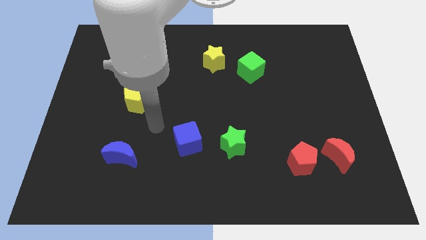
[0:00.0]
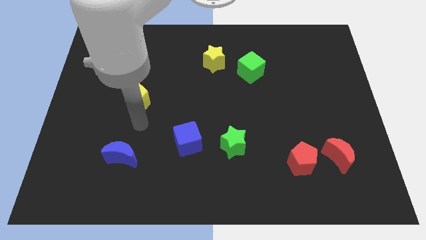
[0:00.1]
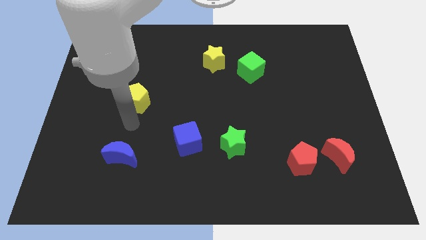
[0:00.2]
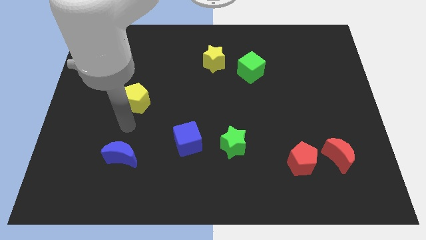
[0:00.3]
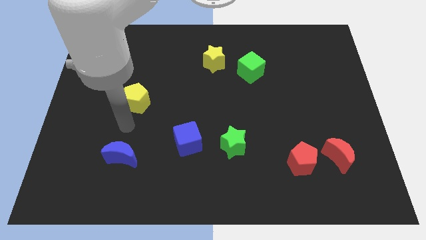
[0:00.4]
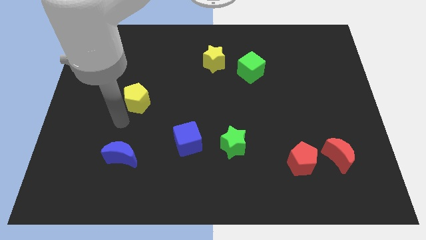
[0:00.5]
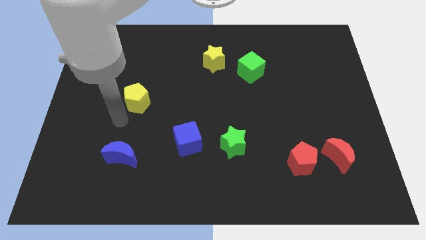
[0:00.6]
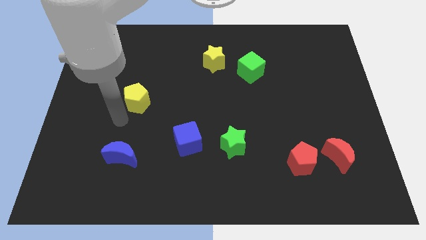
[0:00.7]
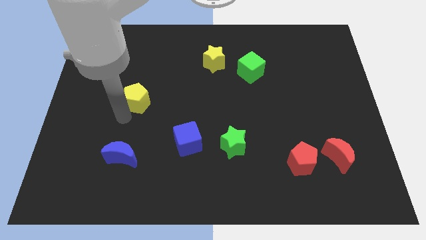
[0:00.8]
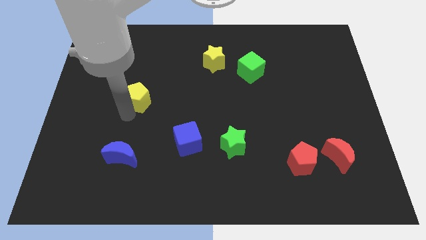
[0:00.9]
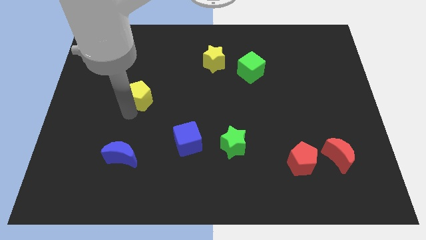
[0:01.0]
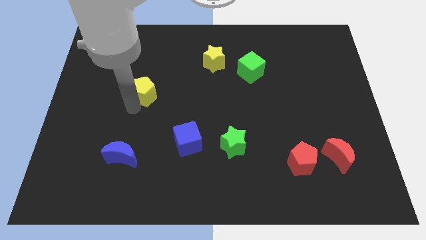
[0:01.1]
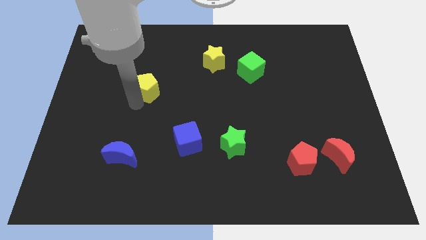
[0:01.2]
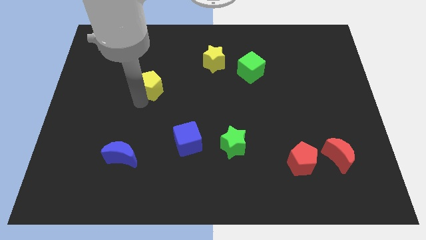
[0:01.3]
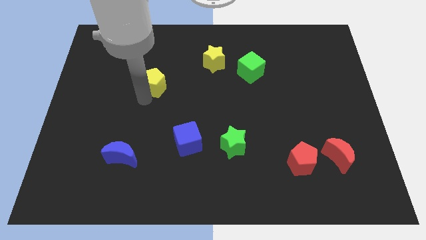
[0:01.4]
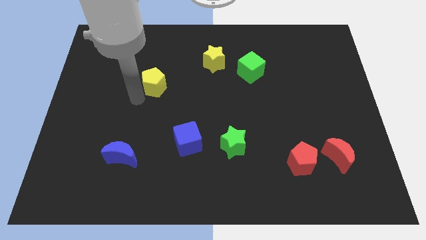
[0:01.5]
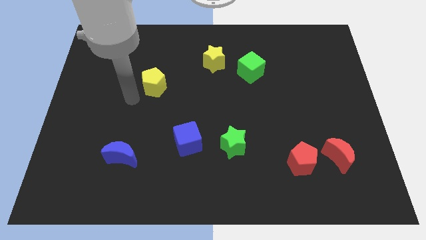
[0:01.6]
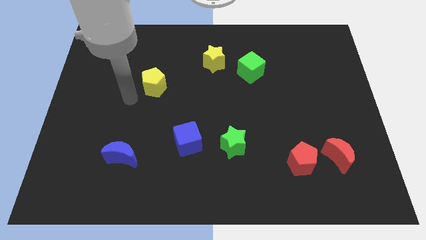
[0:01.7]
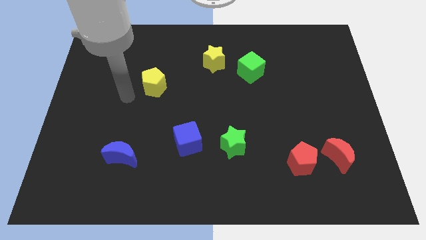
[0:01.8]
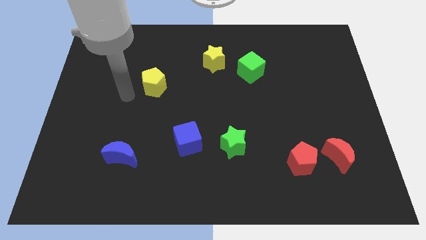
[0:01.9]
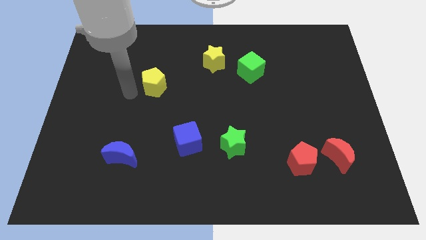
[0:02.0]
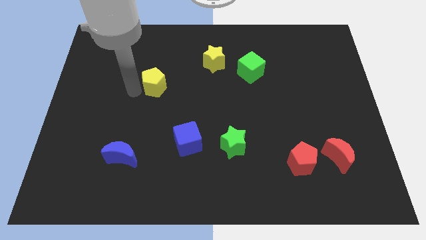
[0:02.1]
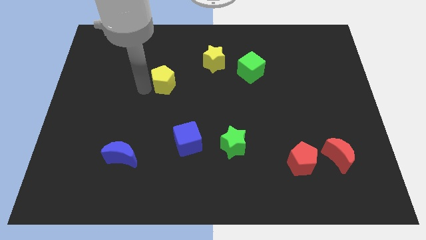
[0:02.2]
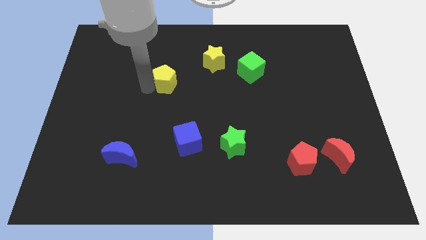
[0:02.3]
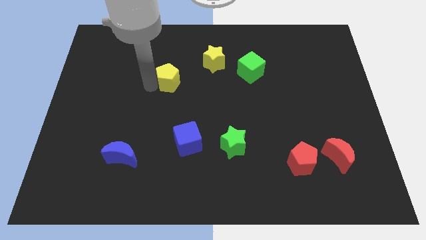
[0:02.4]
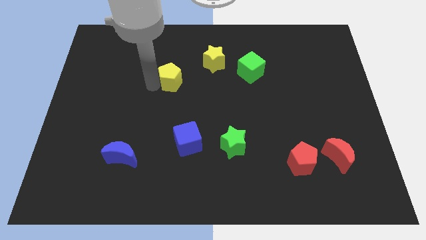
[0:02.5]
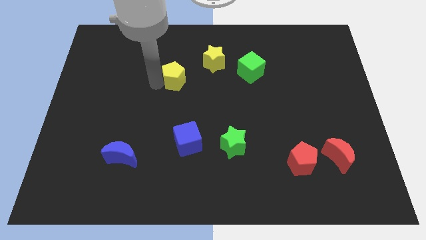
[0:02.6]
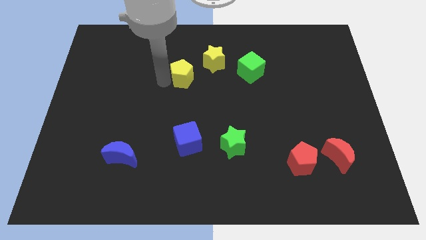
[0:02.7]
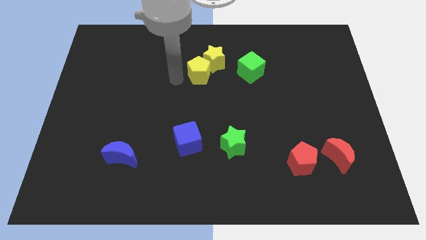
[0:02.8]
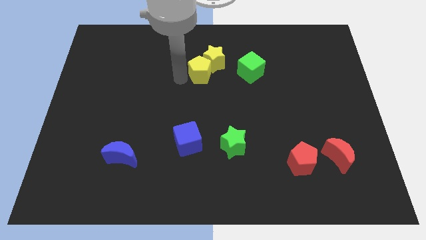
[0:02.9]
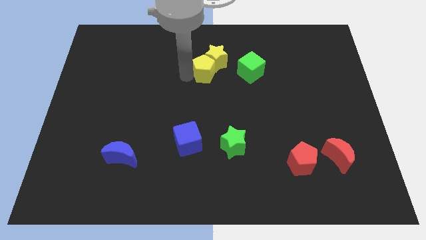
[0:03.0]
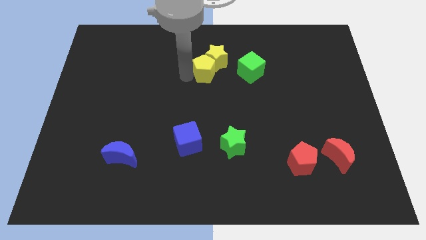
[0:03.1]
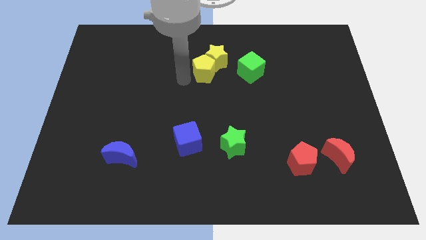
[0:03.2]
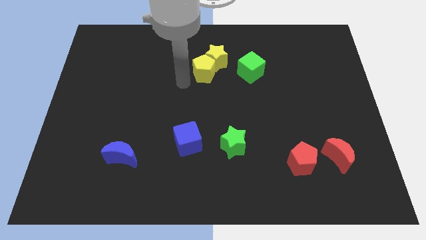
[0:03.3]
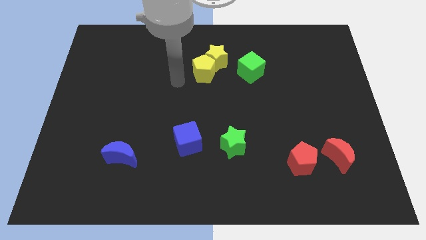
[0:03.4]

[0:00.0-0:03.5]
move the yellow pentagon into the yellow star

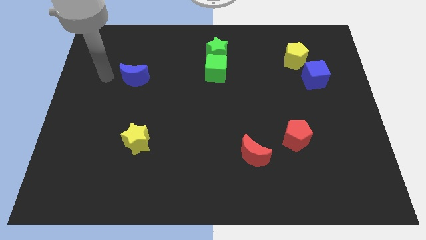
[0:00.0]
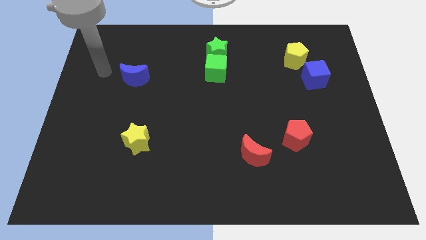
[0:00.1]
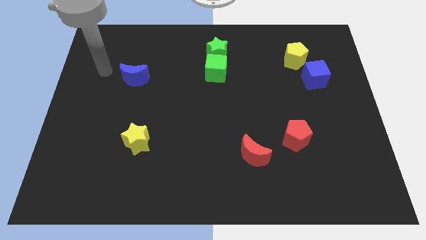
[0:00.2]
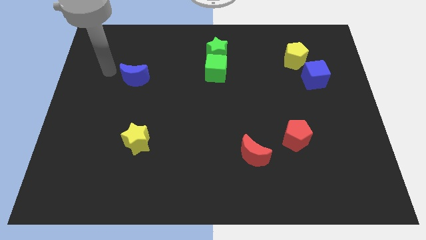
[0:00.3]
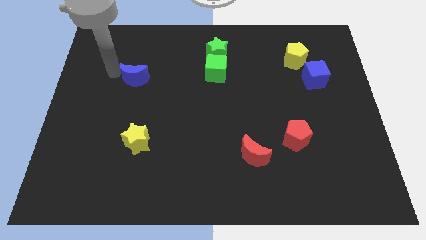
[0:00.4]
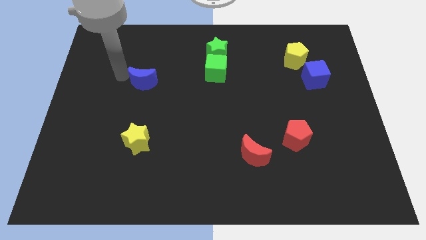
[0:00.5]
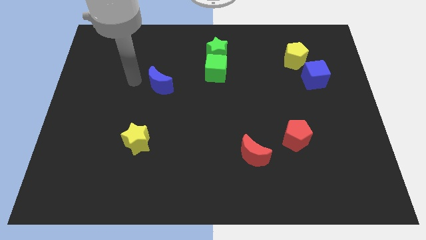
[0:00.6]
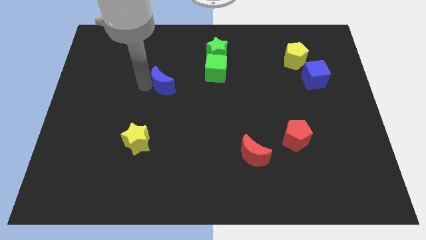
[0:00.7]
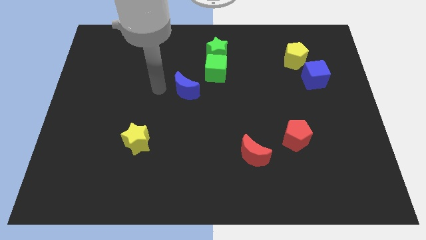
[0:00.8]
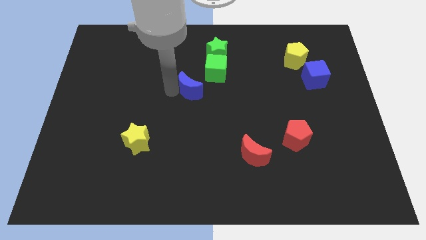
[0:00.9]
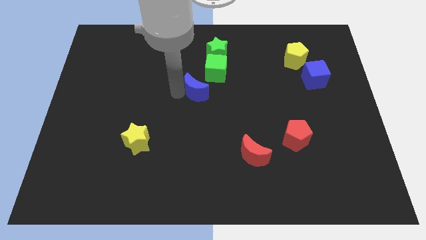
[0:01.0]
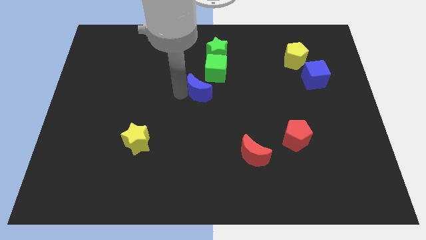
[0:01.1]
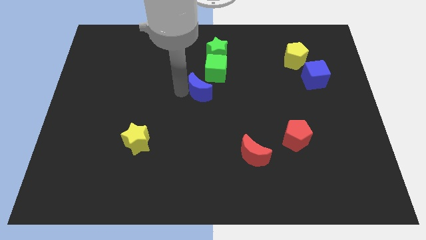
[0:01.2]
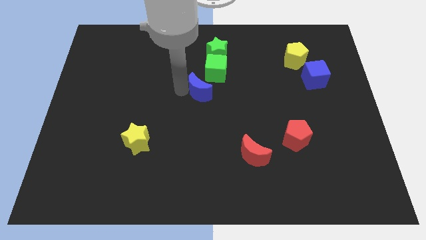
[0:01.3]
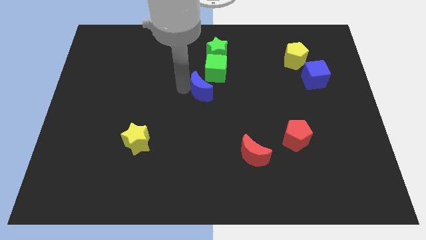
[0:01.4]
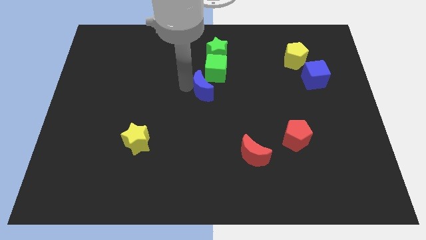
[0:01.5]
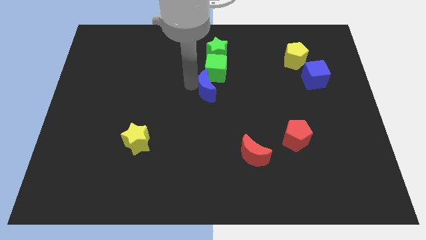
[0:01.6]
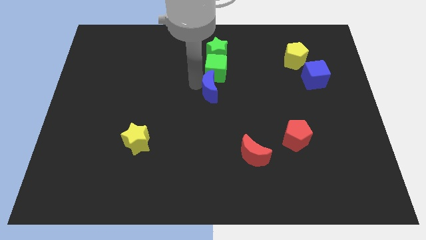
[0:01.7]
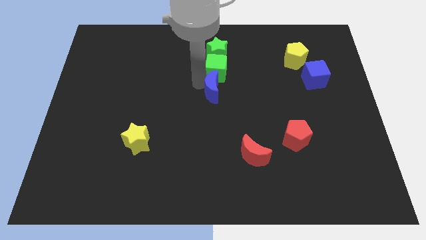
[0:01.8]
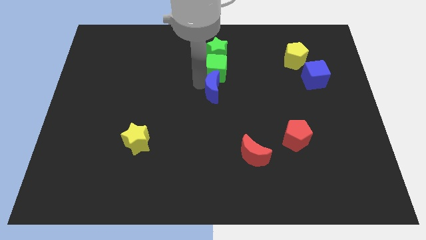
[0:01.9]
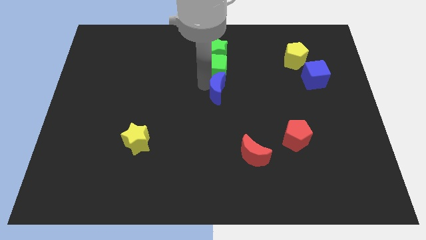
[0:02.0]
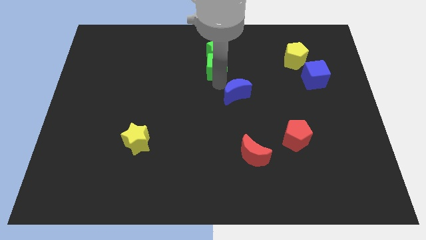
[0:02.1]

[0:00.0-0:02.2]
place the blue crescent below the green cube

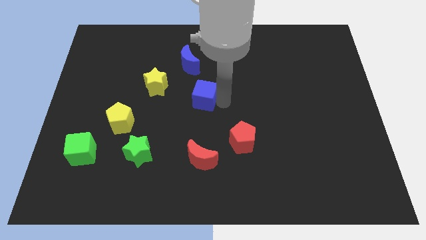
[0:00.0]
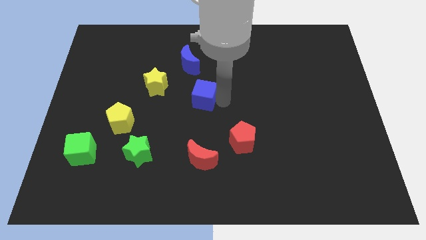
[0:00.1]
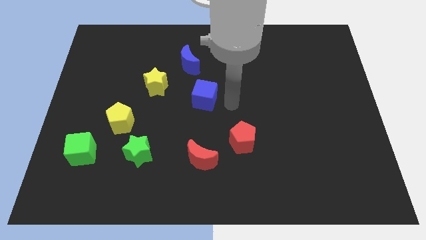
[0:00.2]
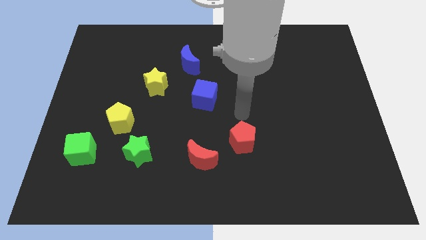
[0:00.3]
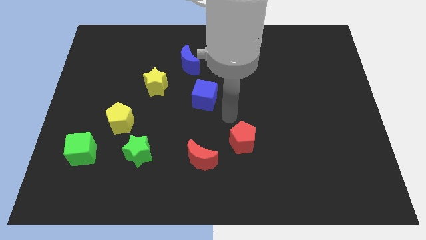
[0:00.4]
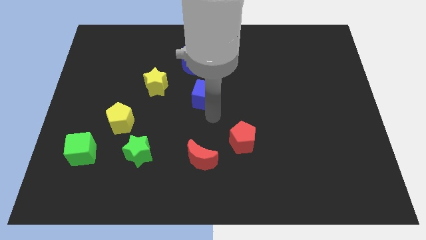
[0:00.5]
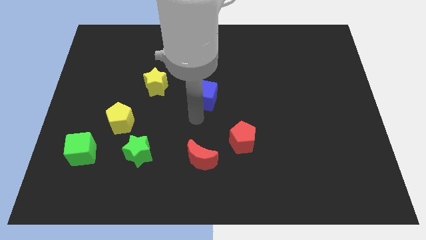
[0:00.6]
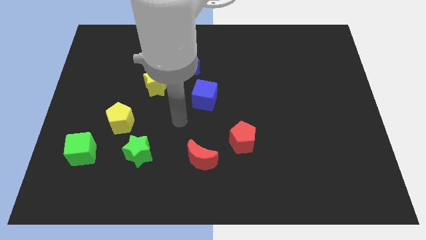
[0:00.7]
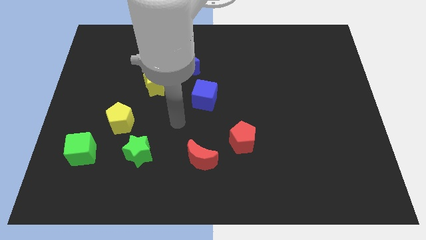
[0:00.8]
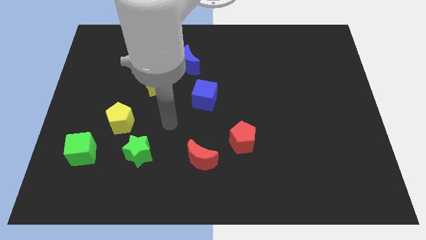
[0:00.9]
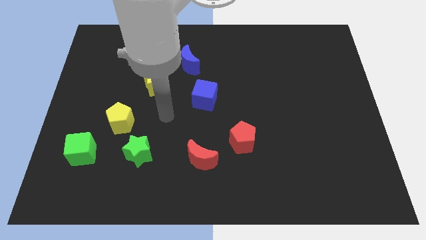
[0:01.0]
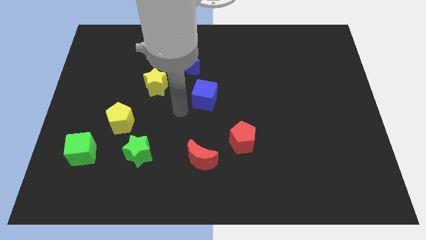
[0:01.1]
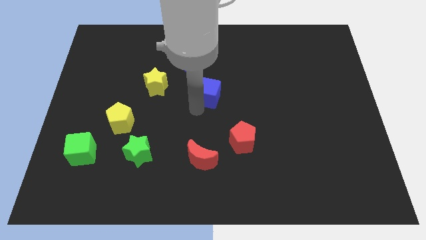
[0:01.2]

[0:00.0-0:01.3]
place your arm down towards the blue cube

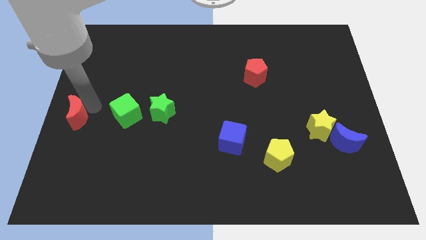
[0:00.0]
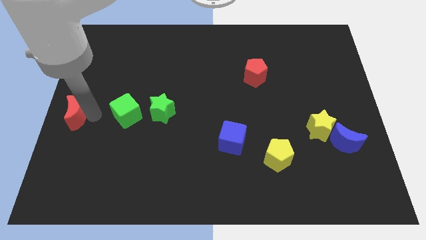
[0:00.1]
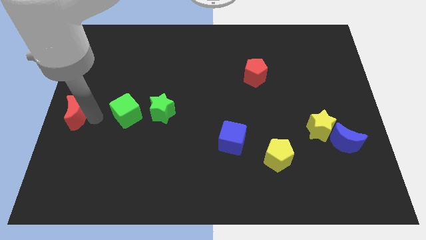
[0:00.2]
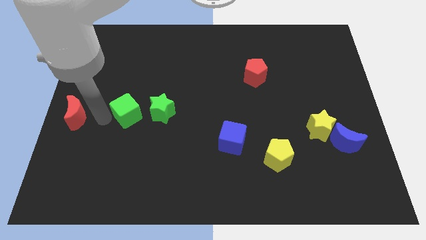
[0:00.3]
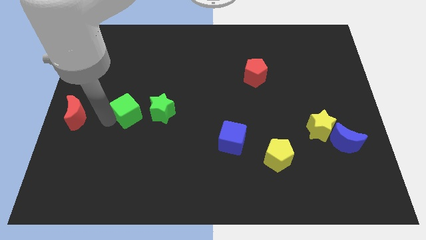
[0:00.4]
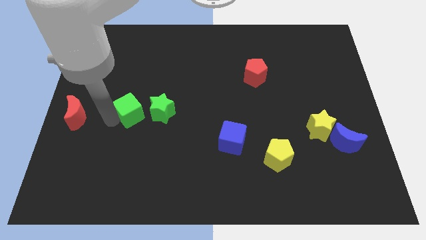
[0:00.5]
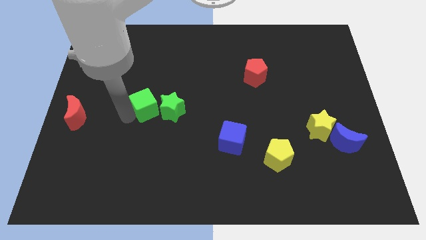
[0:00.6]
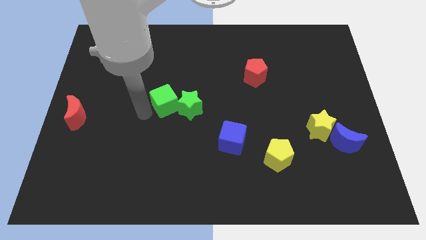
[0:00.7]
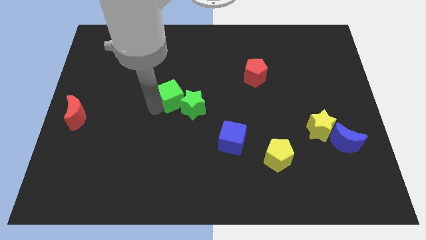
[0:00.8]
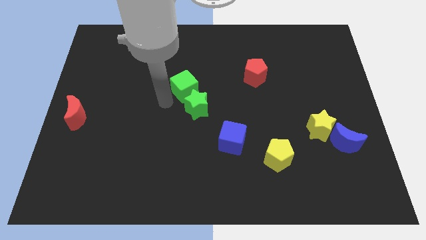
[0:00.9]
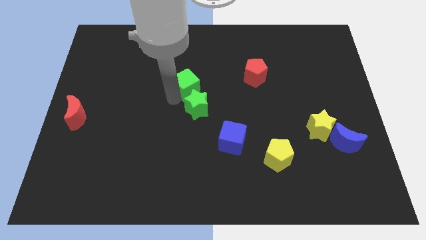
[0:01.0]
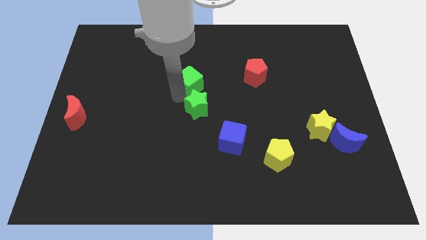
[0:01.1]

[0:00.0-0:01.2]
push the green cube into the green star

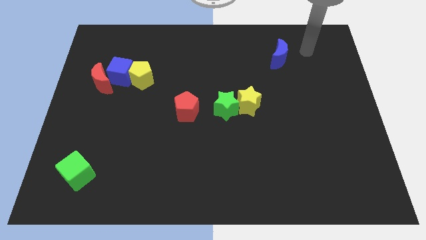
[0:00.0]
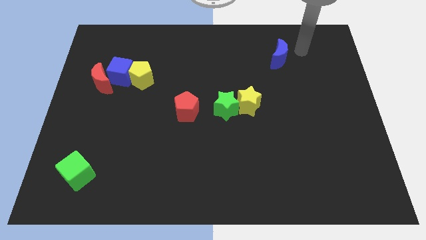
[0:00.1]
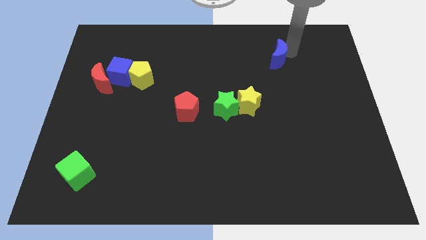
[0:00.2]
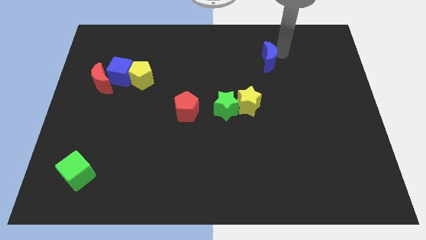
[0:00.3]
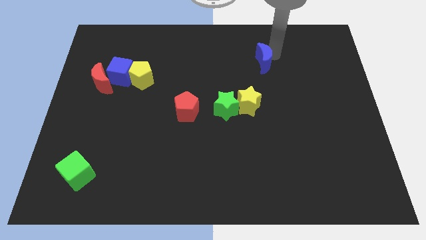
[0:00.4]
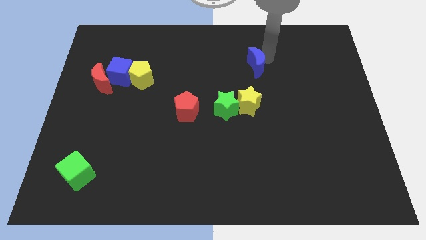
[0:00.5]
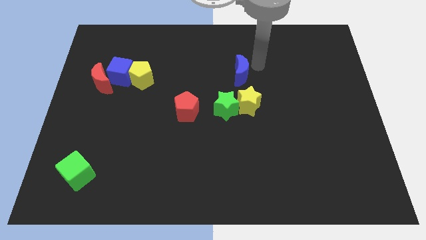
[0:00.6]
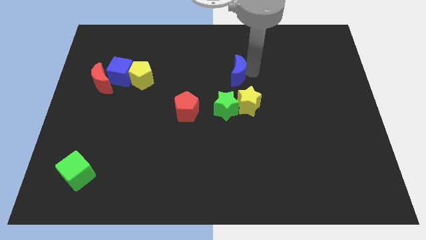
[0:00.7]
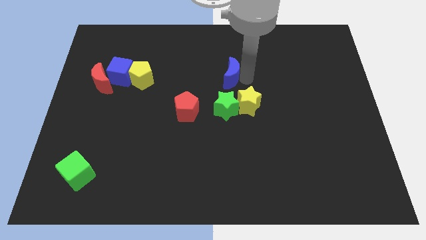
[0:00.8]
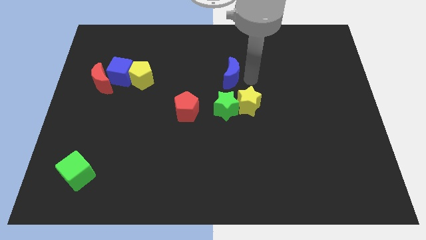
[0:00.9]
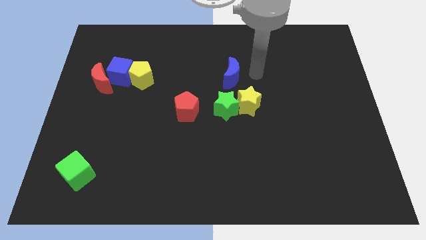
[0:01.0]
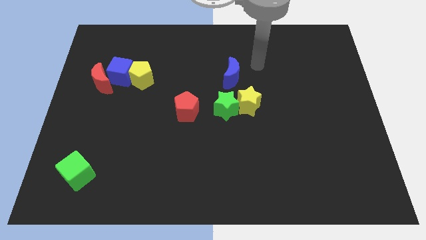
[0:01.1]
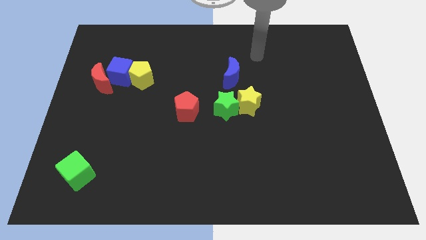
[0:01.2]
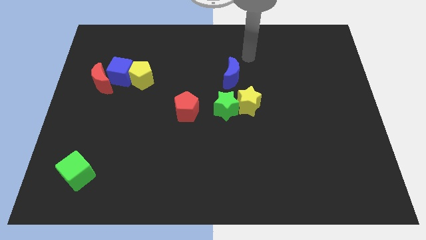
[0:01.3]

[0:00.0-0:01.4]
place the blue moon vertically above the green star
